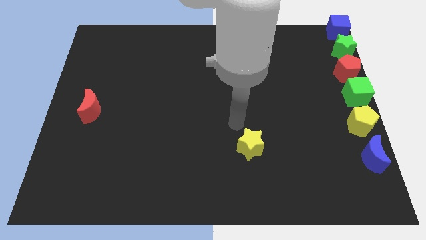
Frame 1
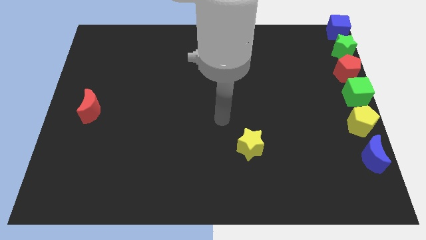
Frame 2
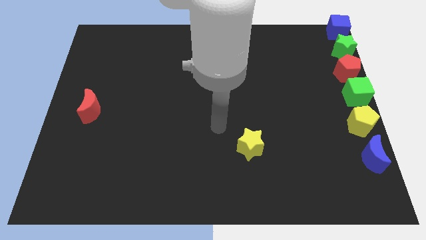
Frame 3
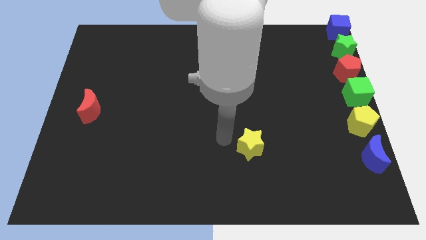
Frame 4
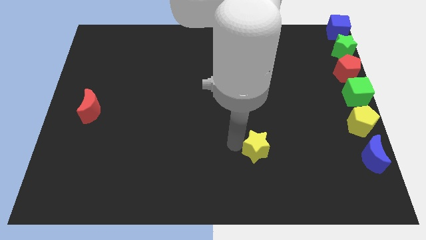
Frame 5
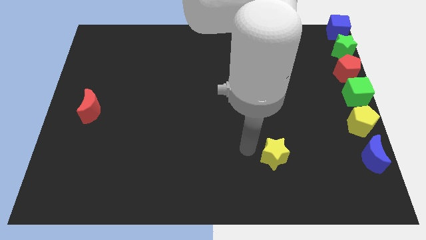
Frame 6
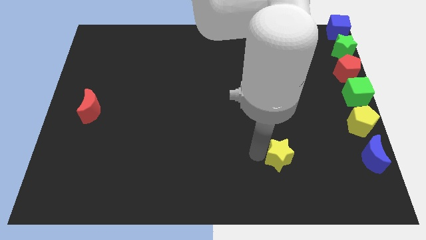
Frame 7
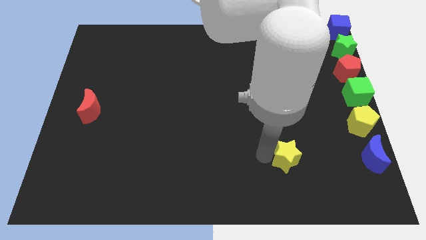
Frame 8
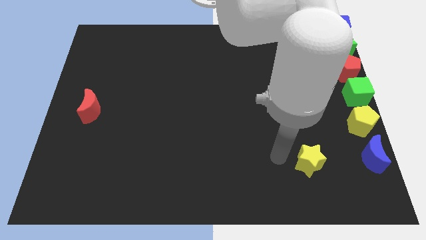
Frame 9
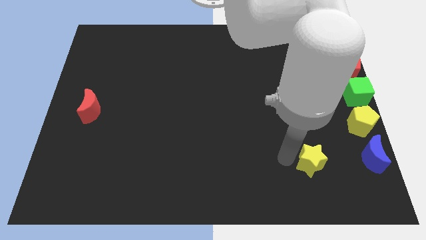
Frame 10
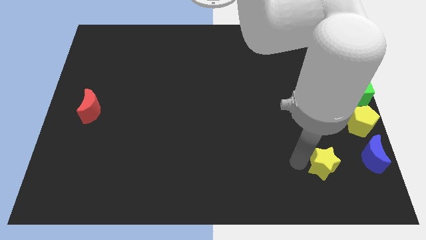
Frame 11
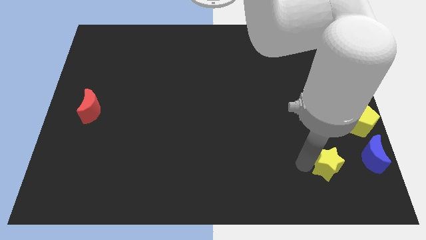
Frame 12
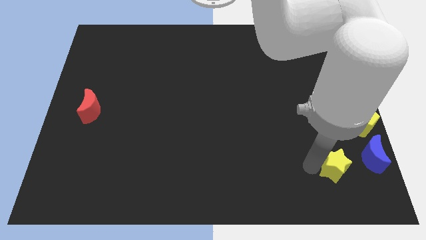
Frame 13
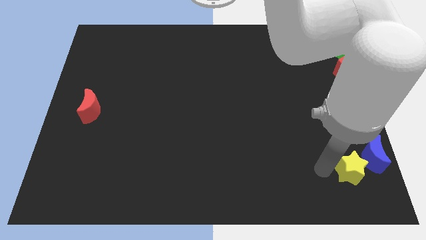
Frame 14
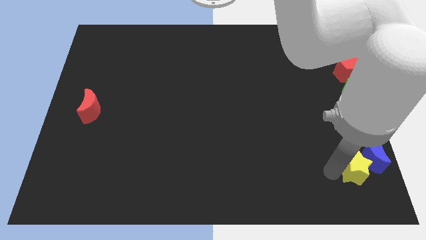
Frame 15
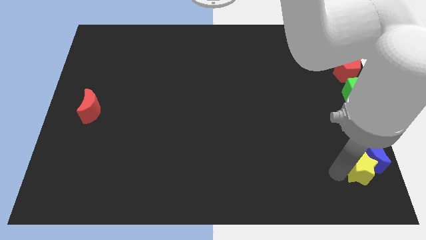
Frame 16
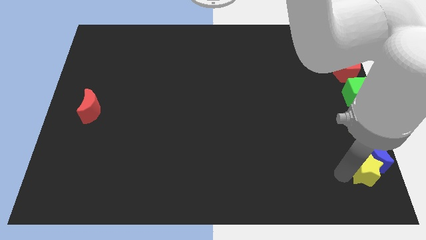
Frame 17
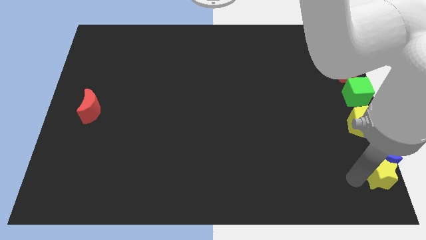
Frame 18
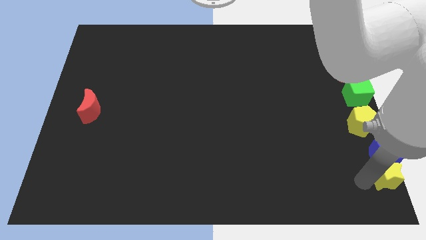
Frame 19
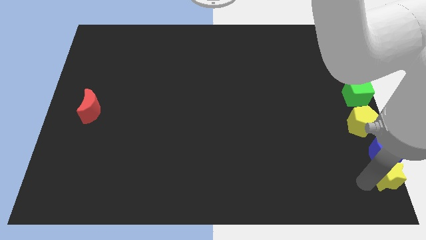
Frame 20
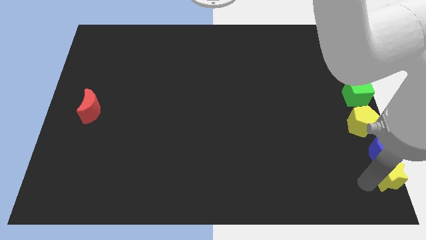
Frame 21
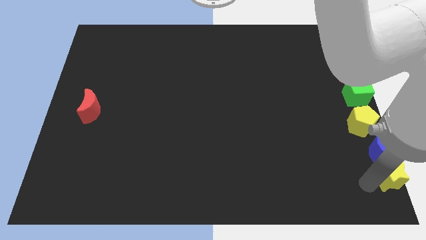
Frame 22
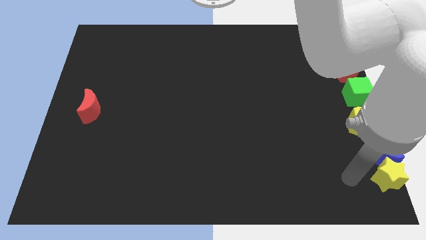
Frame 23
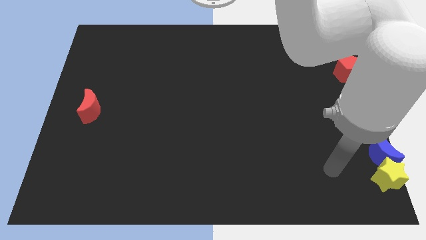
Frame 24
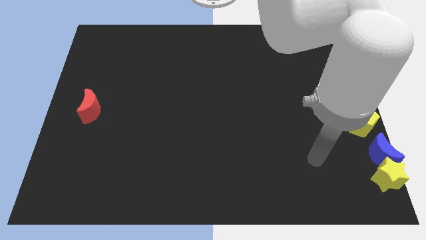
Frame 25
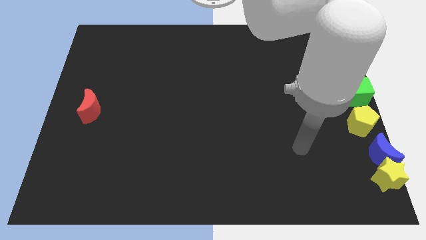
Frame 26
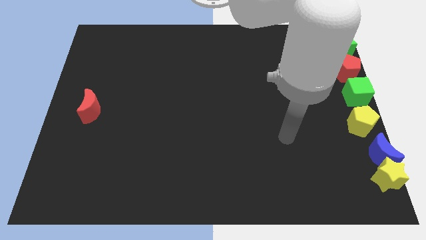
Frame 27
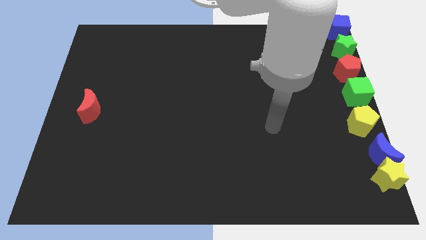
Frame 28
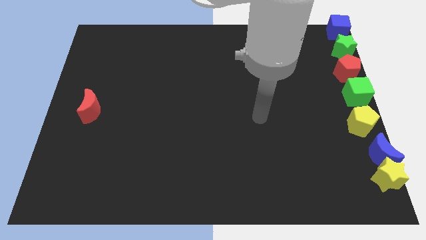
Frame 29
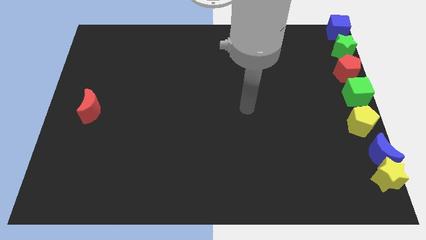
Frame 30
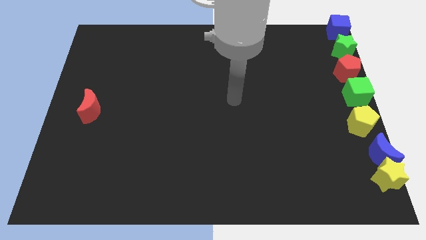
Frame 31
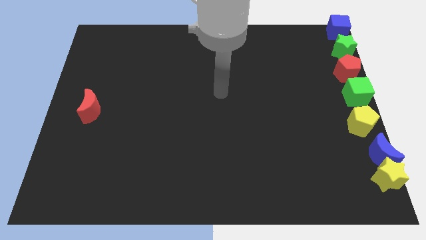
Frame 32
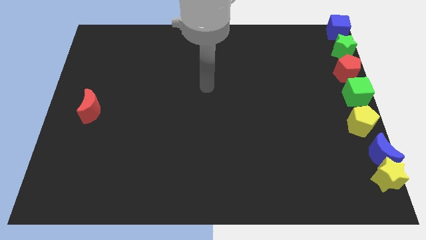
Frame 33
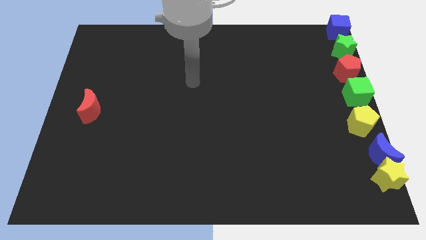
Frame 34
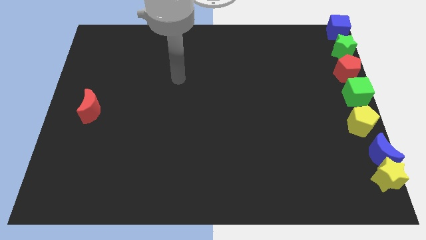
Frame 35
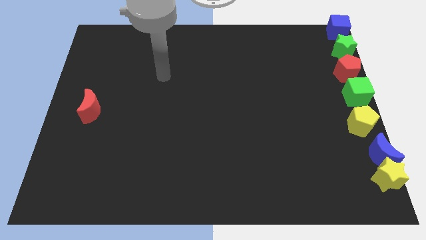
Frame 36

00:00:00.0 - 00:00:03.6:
move the yellow star below the blue moon

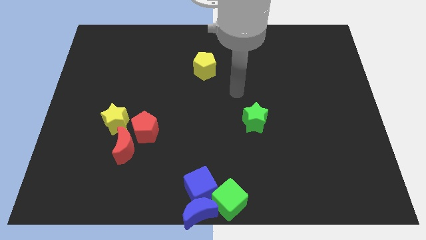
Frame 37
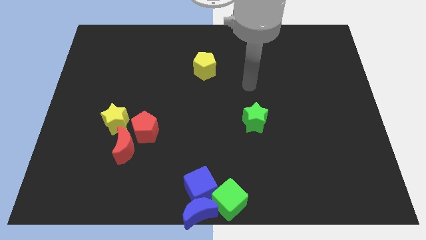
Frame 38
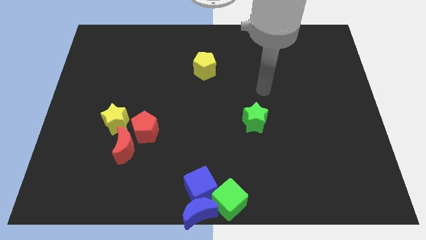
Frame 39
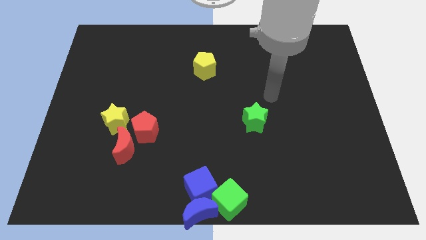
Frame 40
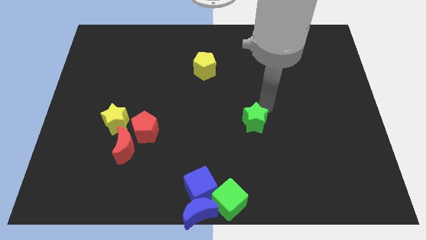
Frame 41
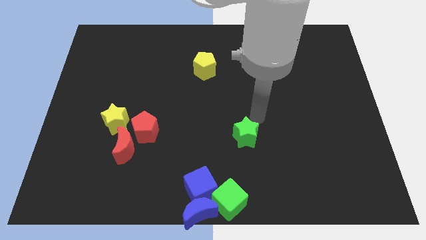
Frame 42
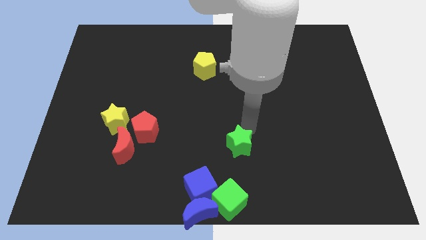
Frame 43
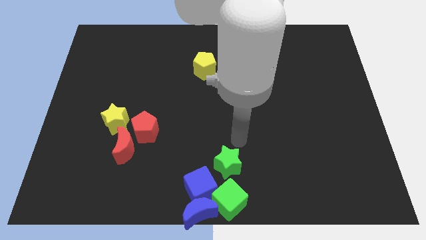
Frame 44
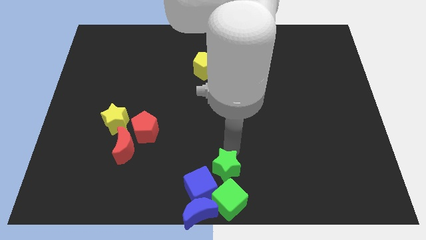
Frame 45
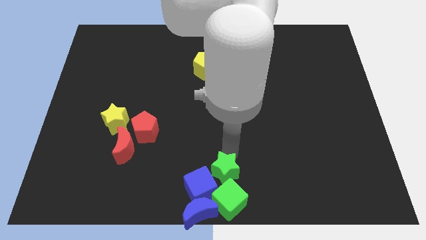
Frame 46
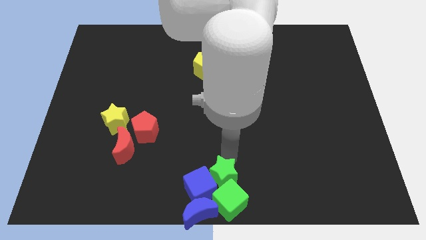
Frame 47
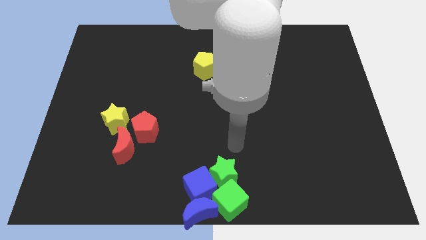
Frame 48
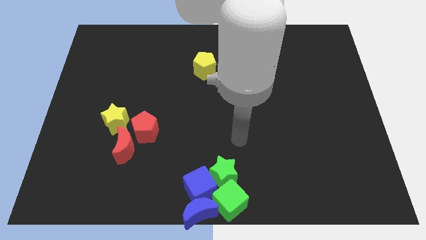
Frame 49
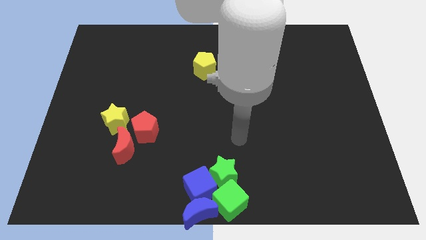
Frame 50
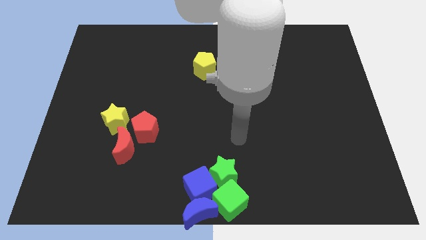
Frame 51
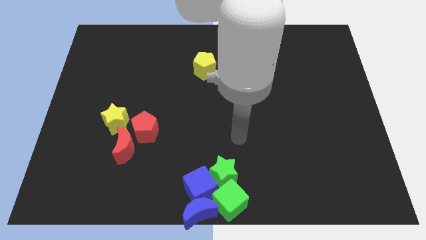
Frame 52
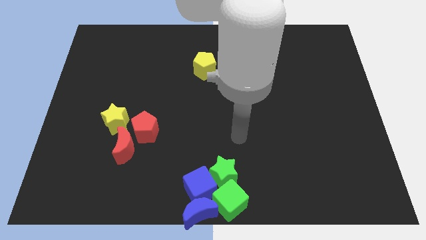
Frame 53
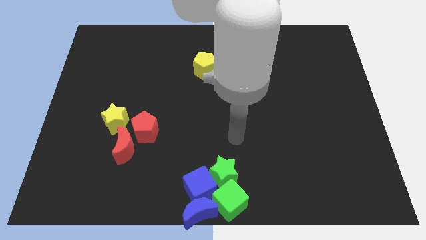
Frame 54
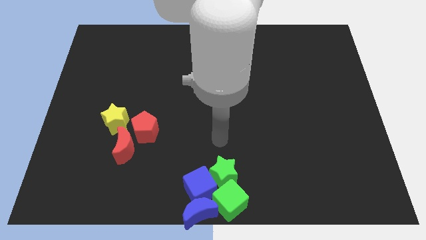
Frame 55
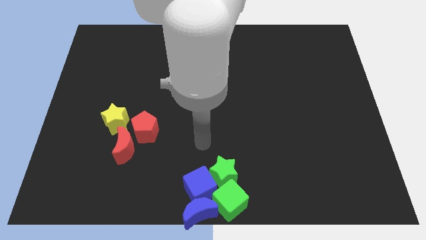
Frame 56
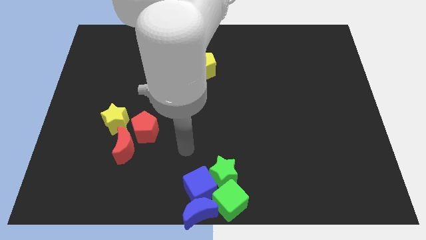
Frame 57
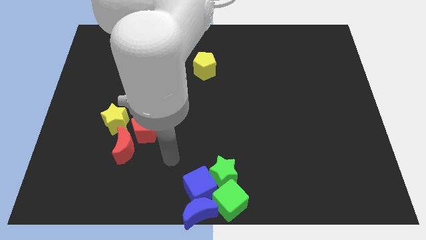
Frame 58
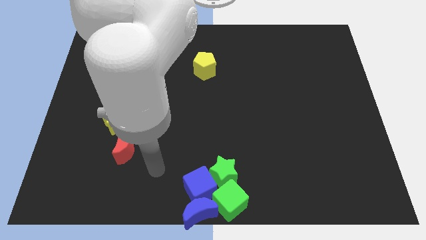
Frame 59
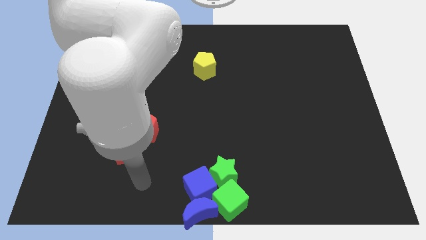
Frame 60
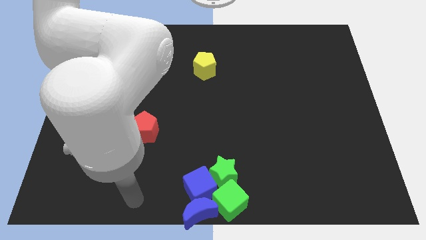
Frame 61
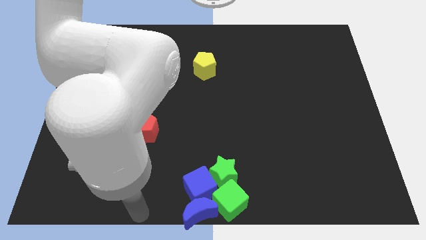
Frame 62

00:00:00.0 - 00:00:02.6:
move green star to the top of green cube

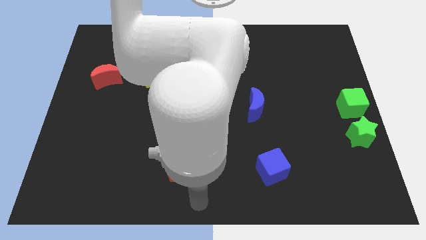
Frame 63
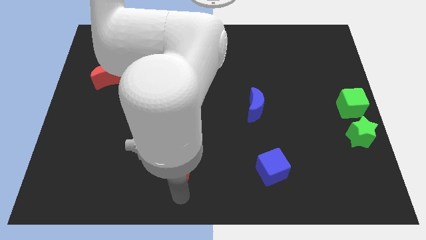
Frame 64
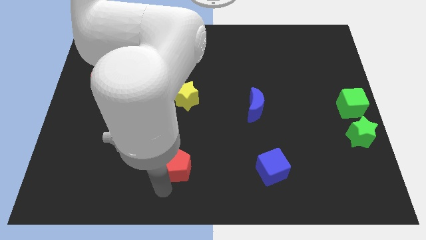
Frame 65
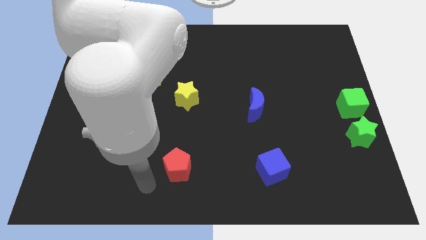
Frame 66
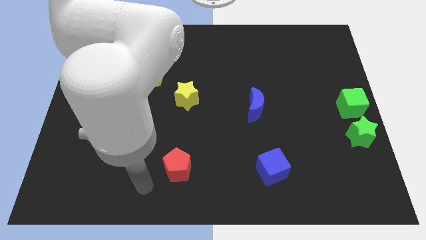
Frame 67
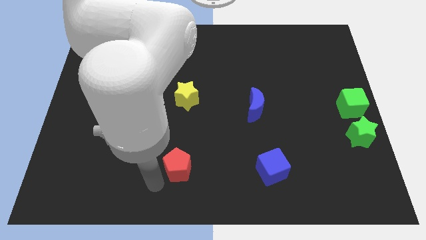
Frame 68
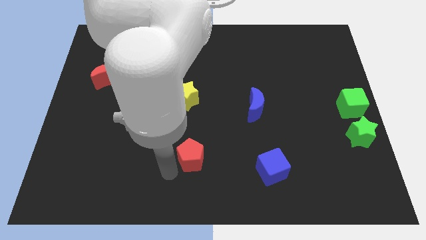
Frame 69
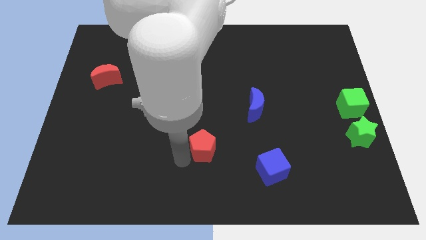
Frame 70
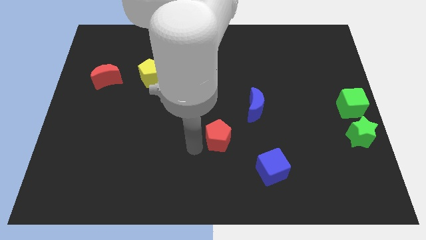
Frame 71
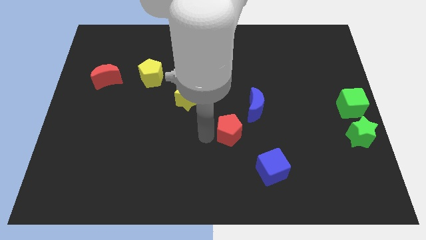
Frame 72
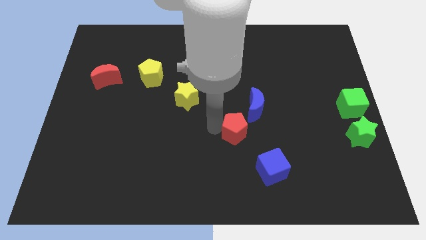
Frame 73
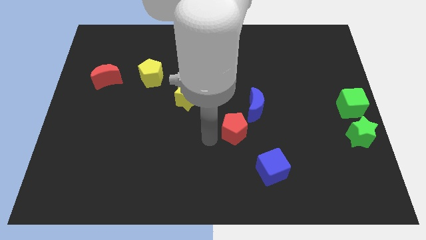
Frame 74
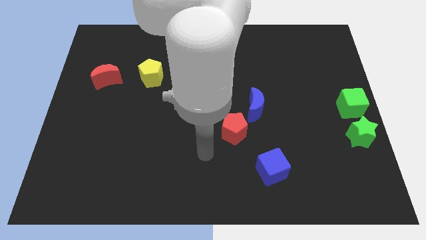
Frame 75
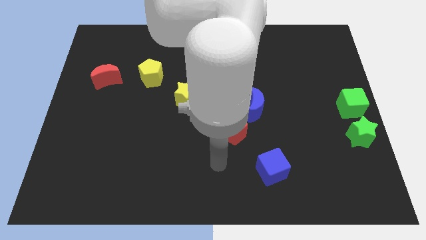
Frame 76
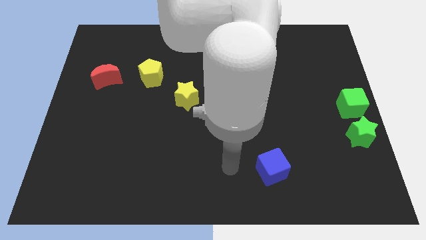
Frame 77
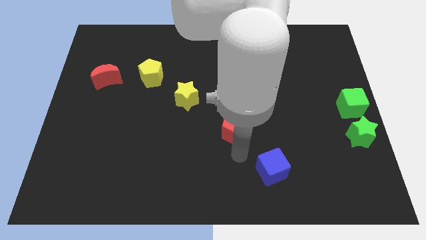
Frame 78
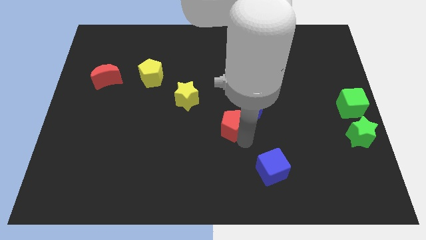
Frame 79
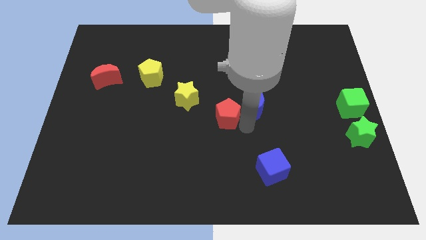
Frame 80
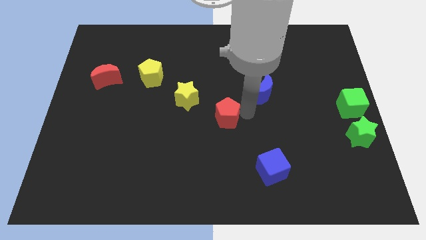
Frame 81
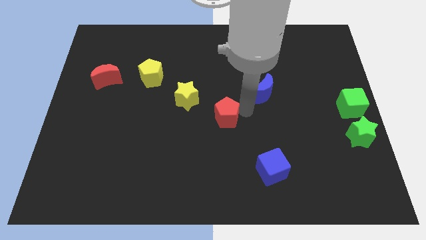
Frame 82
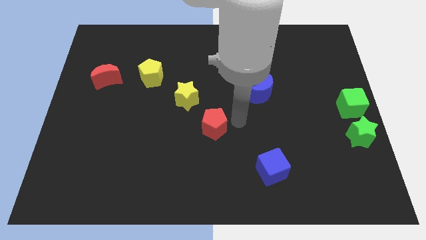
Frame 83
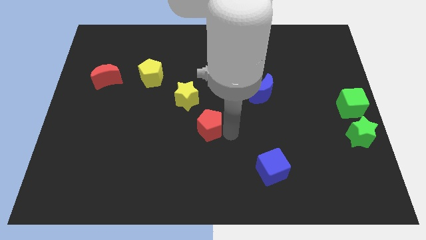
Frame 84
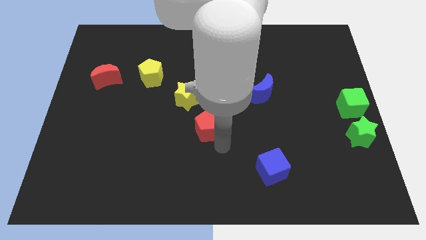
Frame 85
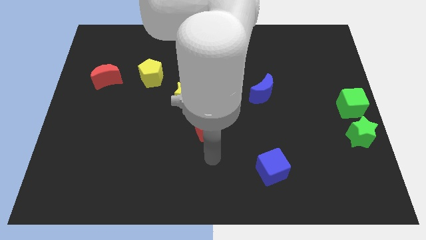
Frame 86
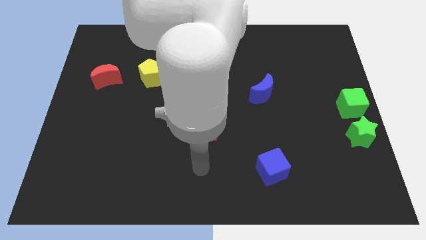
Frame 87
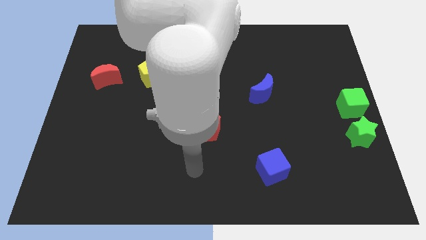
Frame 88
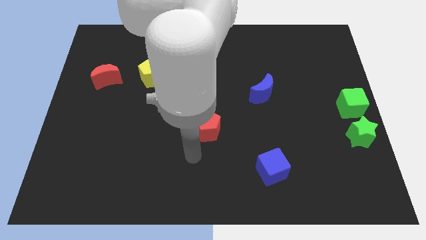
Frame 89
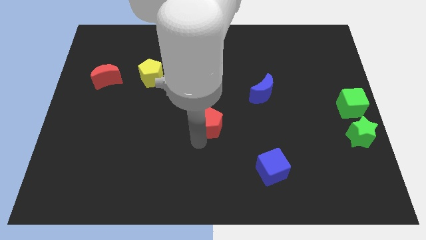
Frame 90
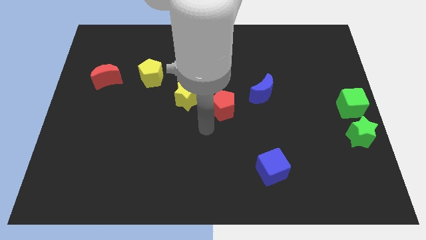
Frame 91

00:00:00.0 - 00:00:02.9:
move red pentagon at center
